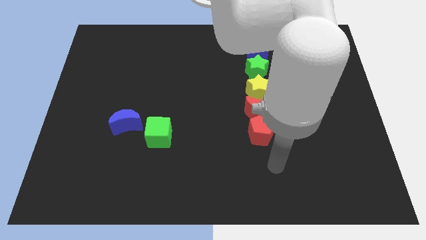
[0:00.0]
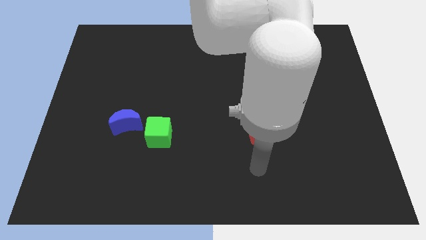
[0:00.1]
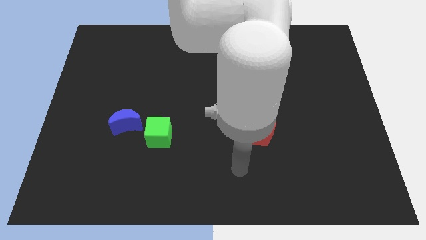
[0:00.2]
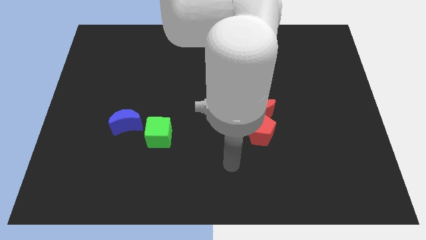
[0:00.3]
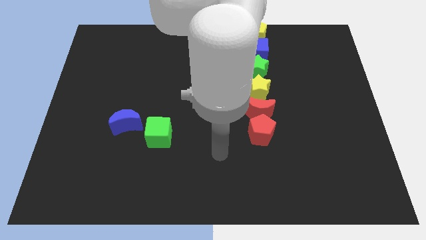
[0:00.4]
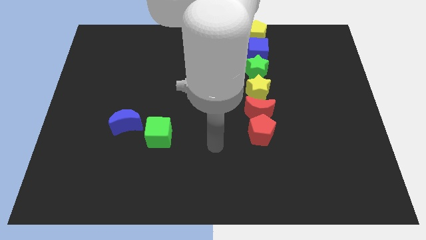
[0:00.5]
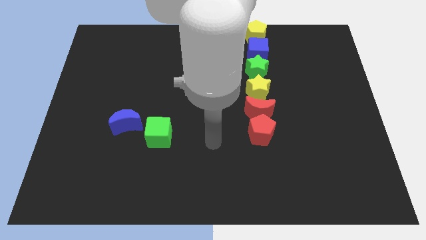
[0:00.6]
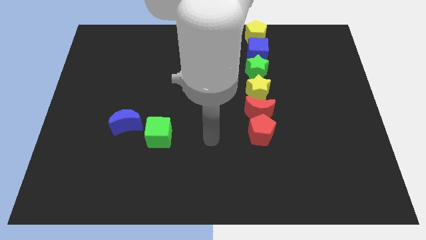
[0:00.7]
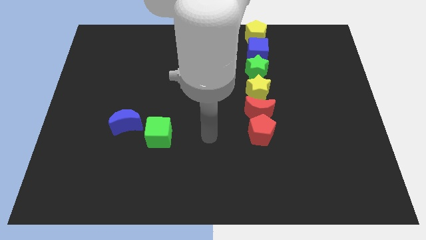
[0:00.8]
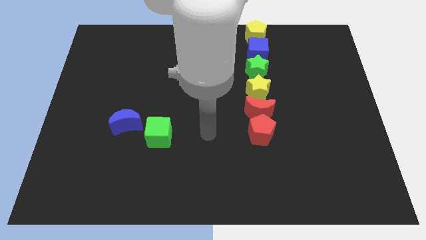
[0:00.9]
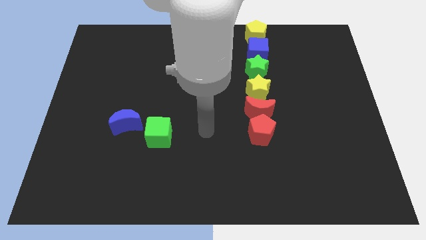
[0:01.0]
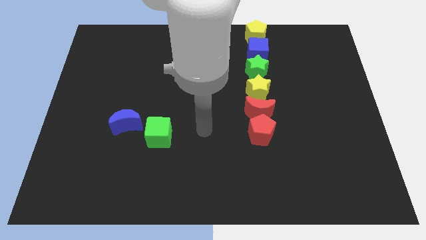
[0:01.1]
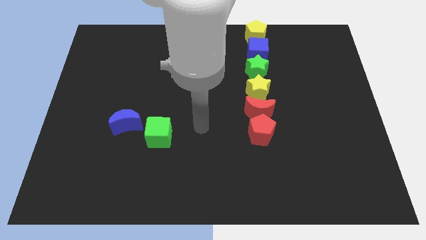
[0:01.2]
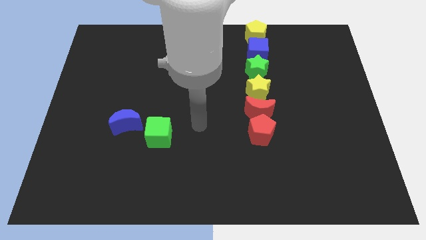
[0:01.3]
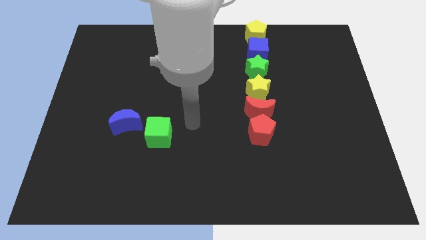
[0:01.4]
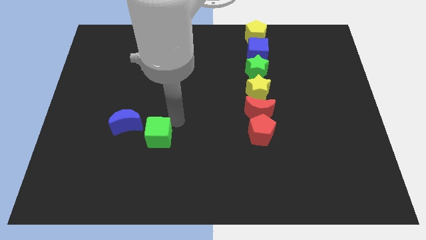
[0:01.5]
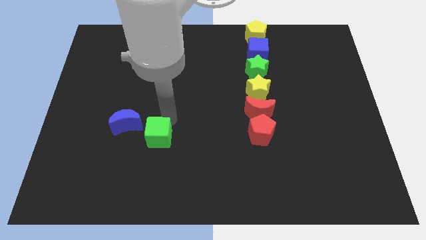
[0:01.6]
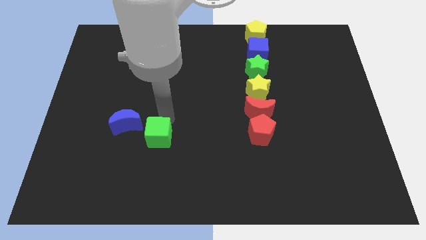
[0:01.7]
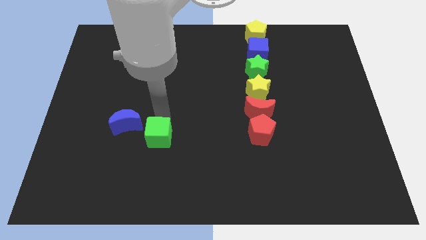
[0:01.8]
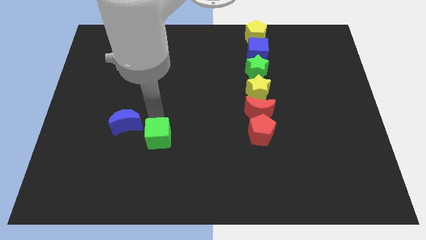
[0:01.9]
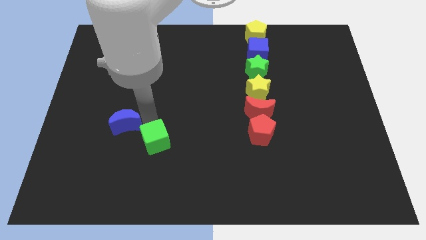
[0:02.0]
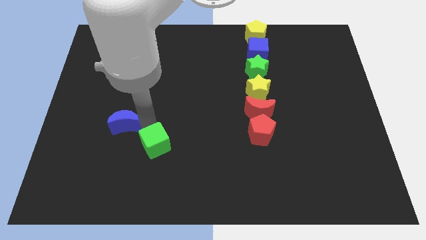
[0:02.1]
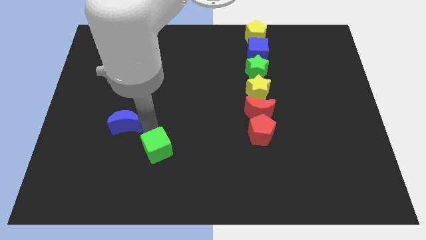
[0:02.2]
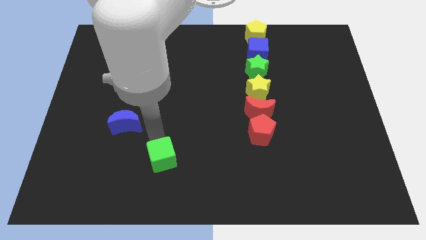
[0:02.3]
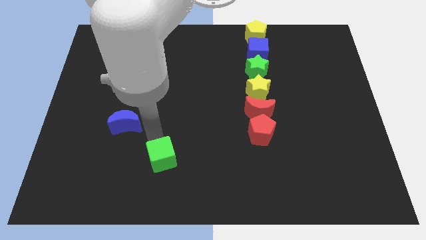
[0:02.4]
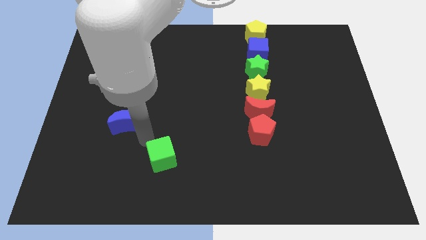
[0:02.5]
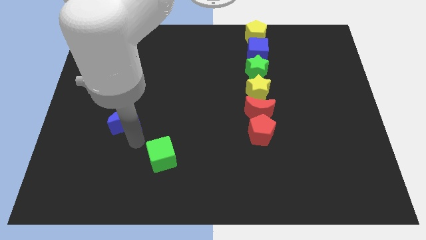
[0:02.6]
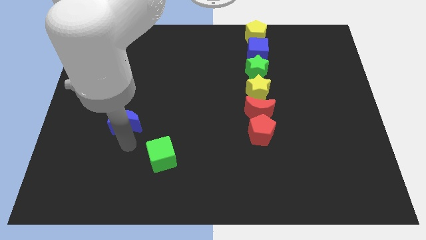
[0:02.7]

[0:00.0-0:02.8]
push the green cube to the bottom

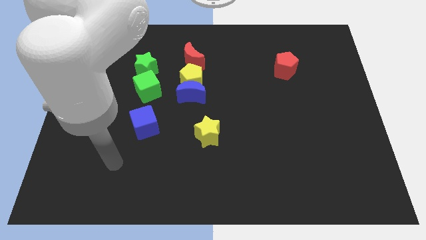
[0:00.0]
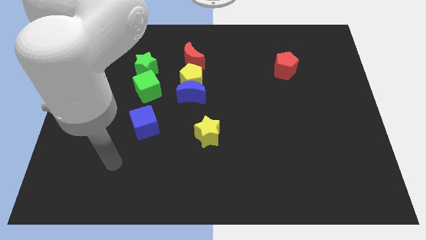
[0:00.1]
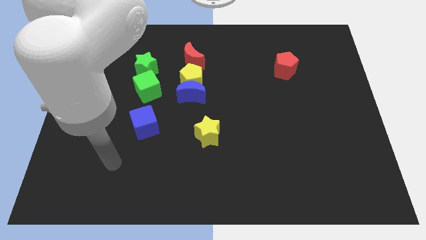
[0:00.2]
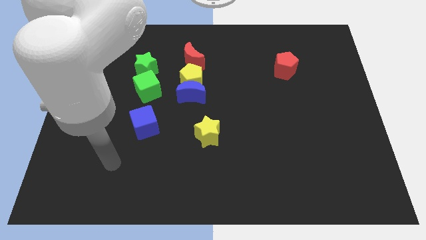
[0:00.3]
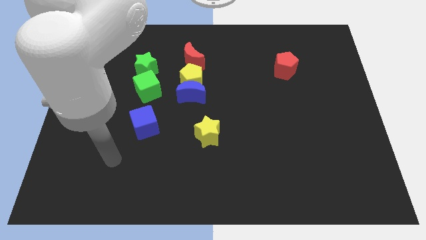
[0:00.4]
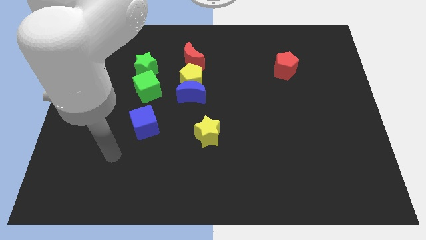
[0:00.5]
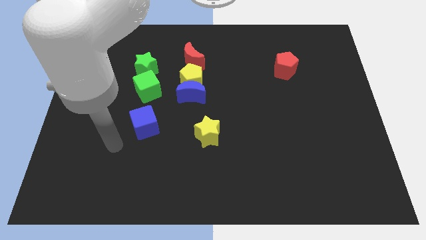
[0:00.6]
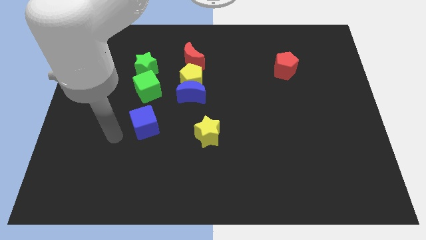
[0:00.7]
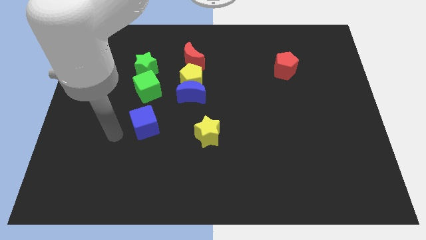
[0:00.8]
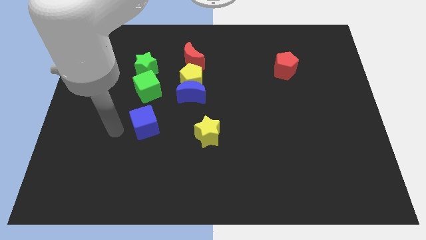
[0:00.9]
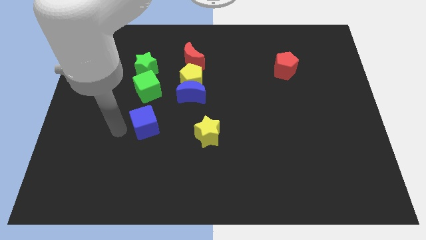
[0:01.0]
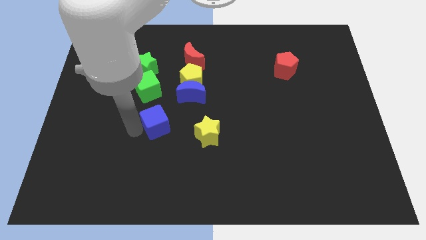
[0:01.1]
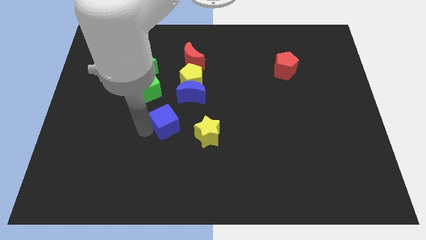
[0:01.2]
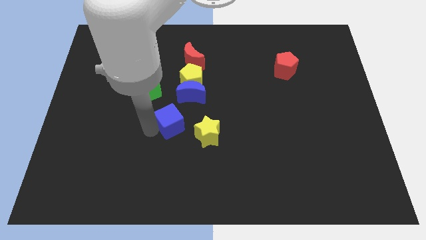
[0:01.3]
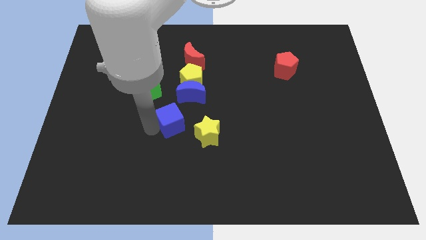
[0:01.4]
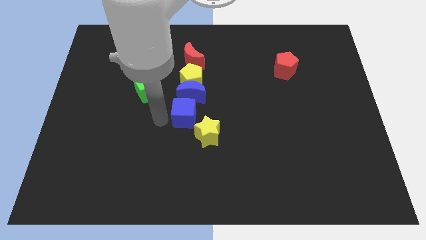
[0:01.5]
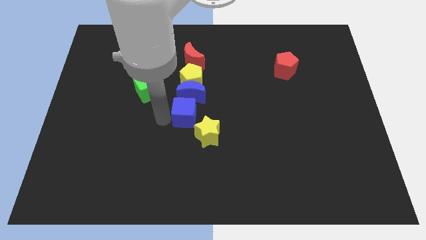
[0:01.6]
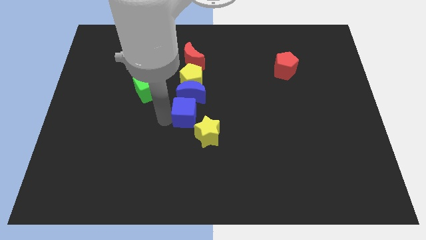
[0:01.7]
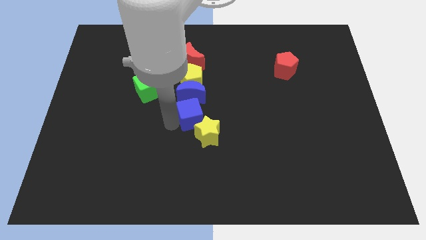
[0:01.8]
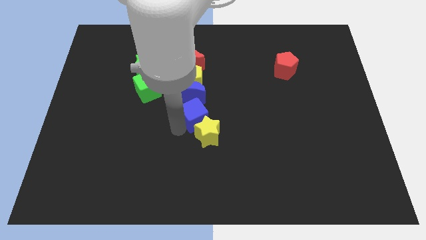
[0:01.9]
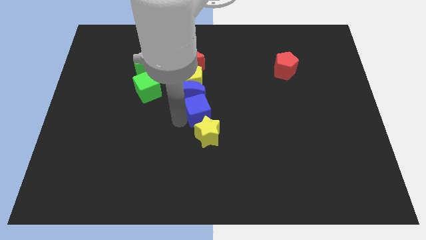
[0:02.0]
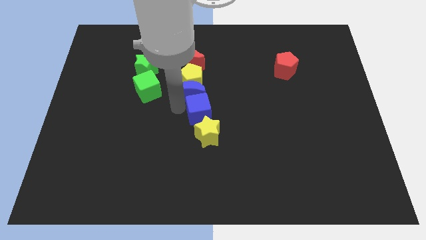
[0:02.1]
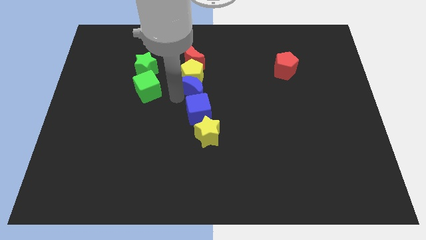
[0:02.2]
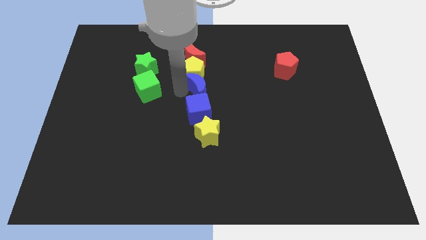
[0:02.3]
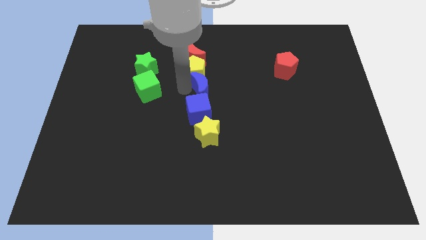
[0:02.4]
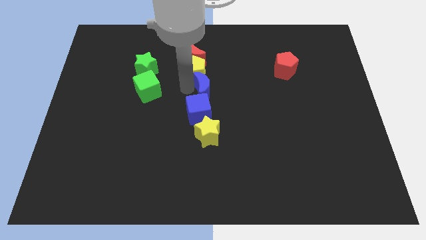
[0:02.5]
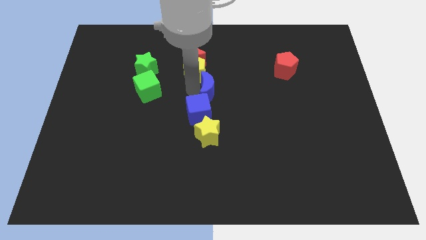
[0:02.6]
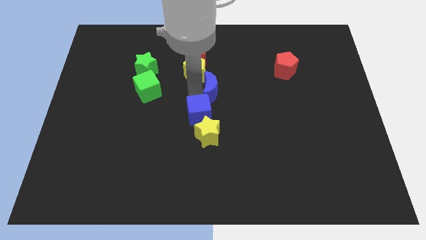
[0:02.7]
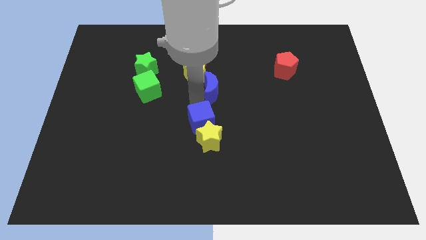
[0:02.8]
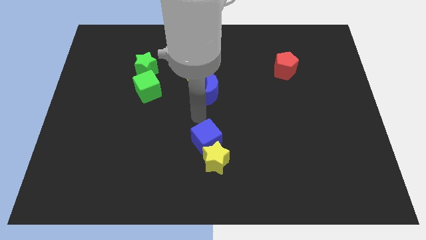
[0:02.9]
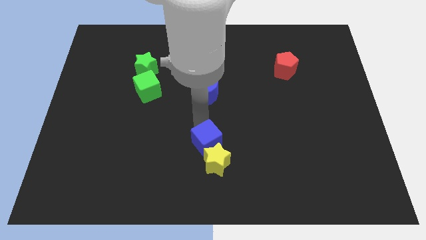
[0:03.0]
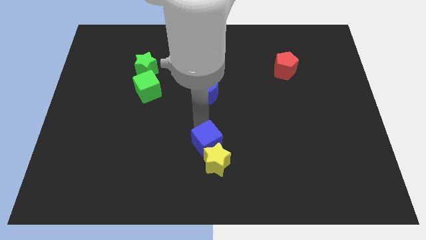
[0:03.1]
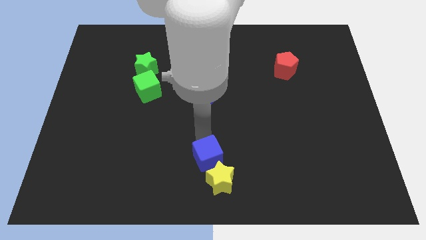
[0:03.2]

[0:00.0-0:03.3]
push the blue cube into the yellow star

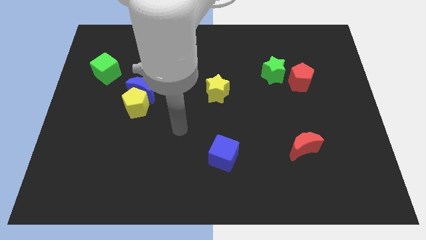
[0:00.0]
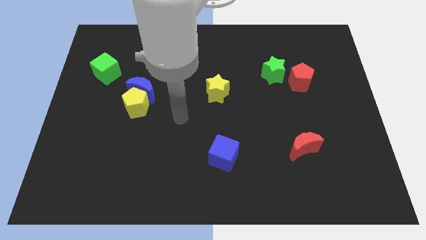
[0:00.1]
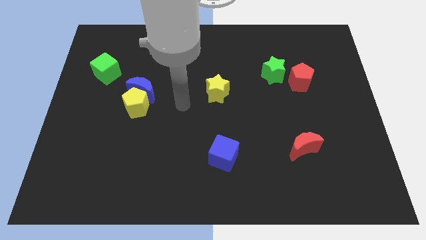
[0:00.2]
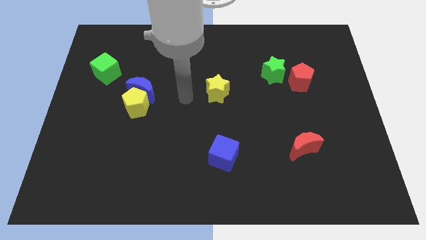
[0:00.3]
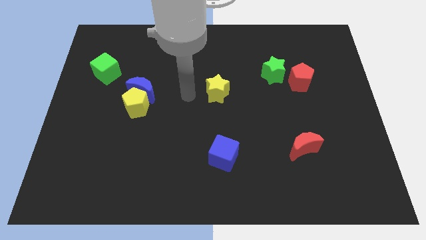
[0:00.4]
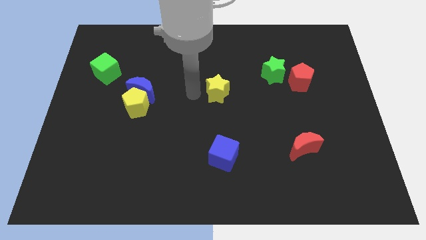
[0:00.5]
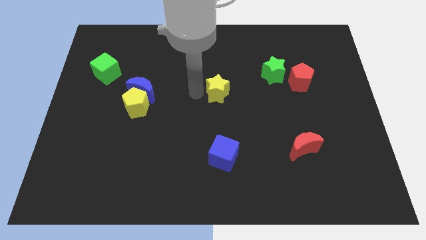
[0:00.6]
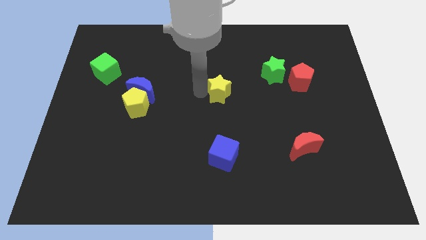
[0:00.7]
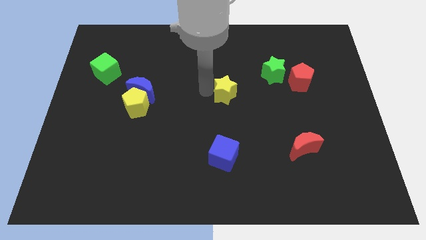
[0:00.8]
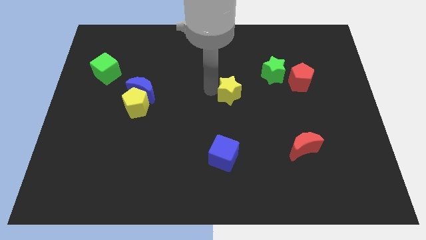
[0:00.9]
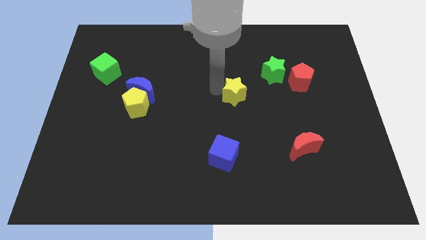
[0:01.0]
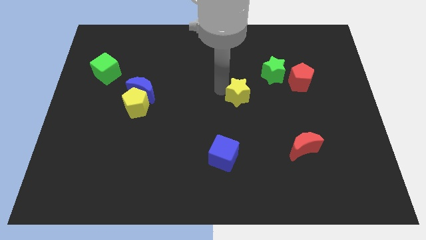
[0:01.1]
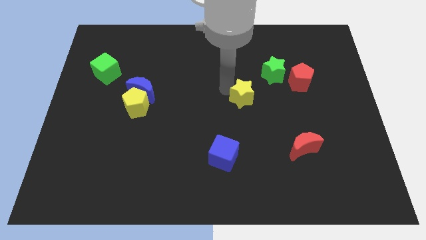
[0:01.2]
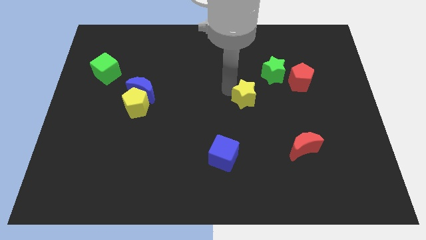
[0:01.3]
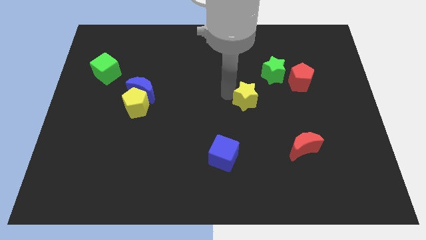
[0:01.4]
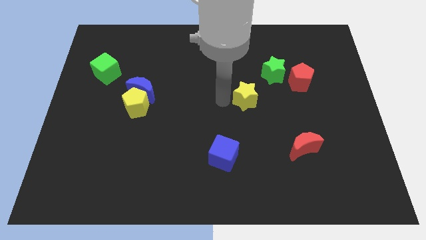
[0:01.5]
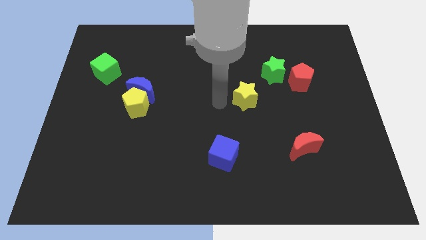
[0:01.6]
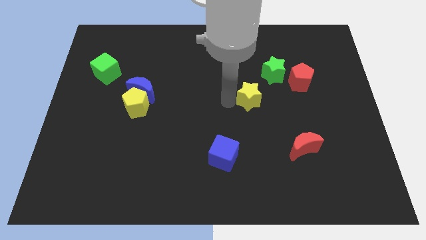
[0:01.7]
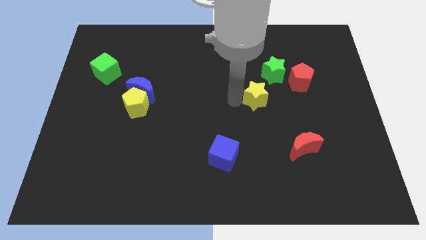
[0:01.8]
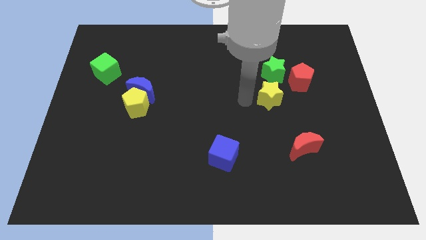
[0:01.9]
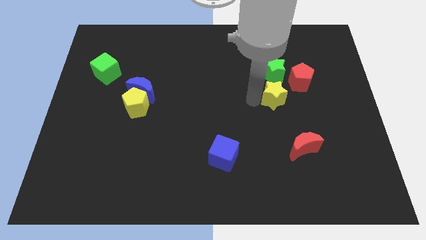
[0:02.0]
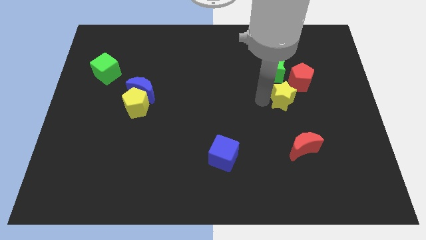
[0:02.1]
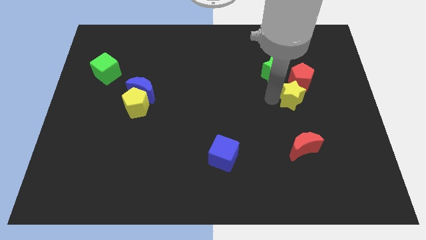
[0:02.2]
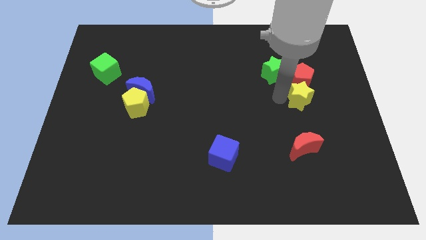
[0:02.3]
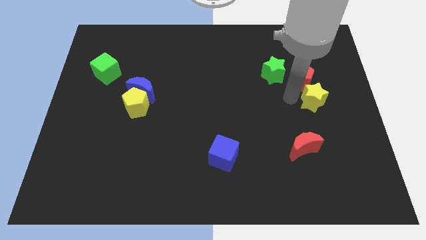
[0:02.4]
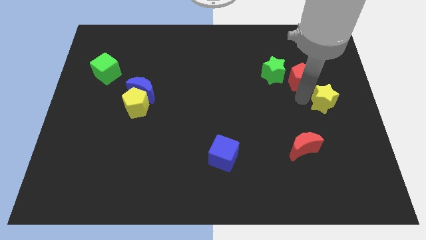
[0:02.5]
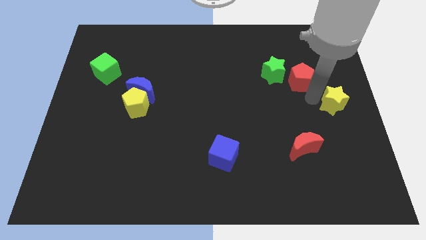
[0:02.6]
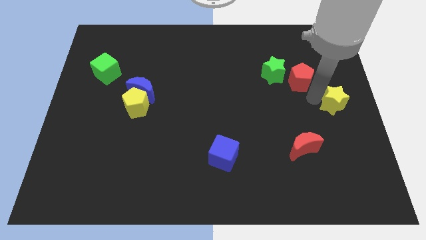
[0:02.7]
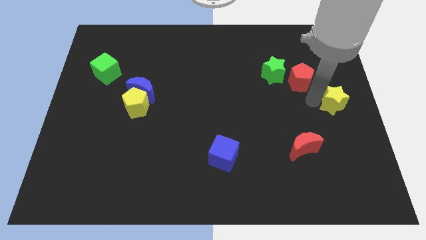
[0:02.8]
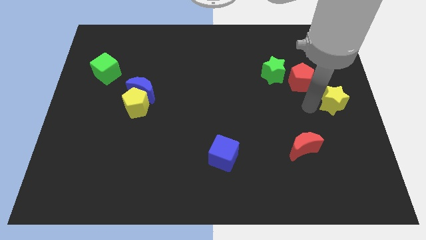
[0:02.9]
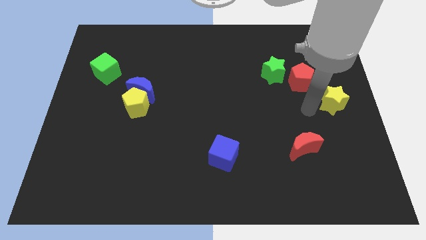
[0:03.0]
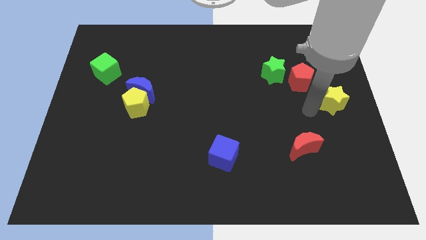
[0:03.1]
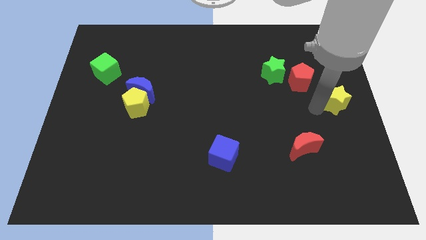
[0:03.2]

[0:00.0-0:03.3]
move the yellow star to the center right of the board
